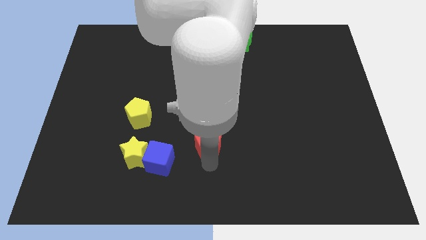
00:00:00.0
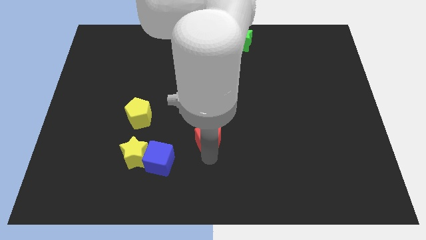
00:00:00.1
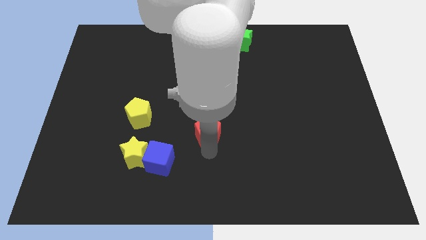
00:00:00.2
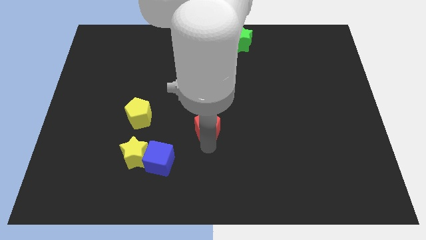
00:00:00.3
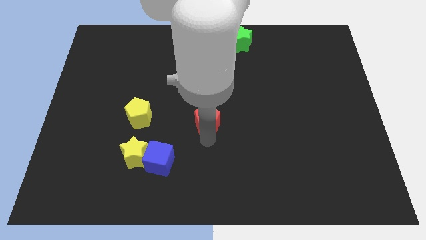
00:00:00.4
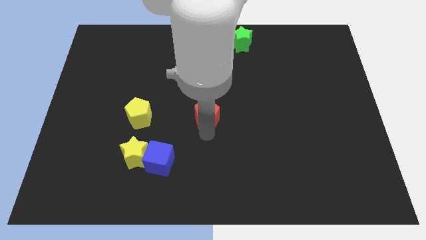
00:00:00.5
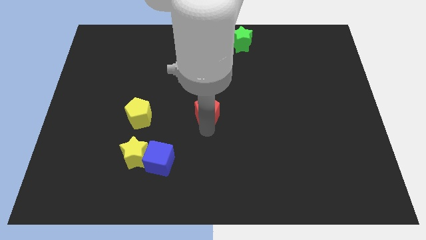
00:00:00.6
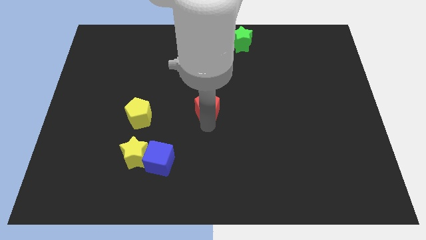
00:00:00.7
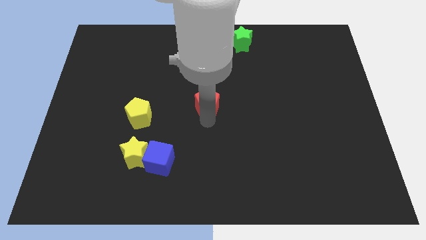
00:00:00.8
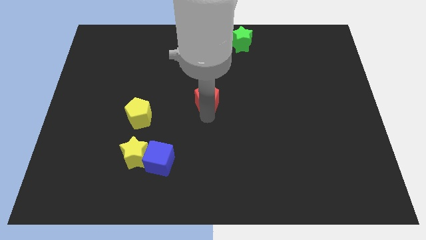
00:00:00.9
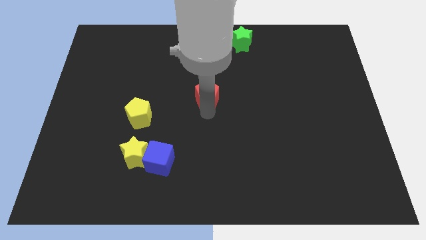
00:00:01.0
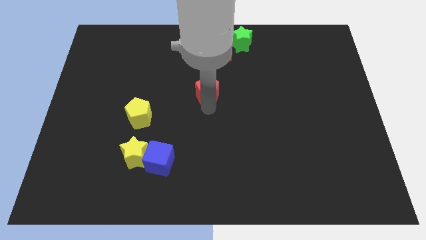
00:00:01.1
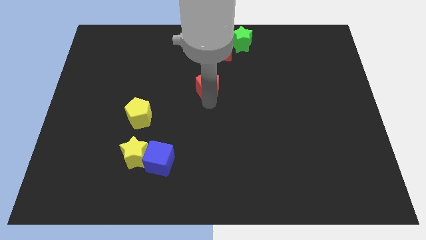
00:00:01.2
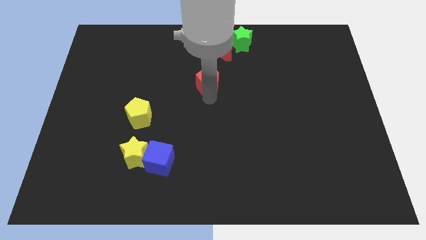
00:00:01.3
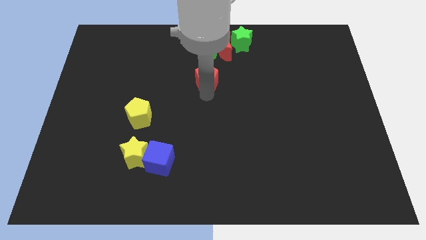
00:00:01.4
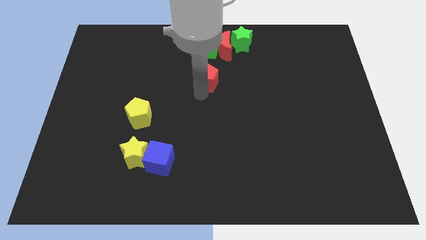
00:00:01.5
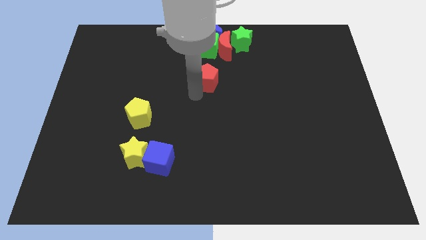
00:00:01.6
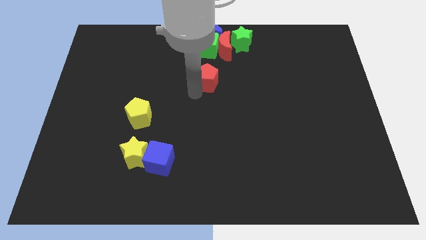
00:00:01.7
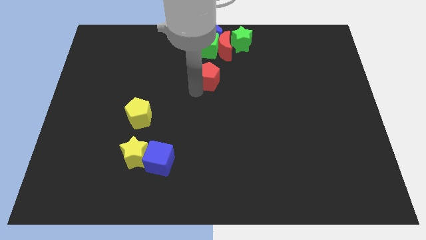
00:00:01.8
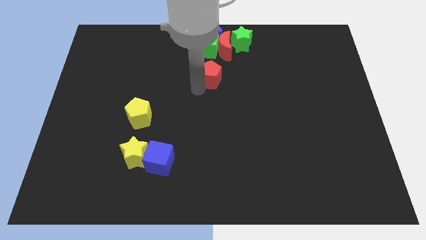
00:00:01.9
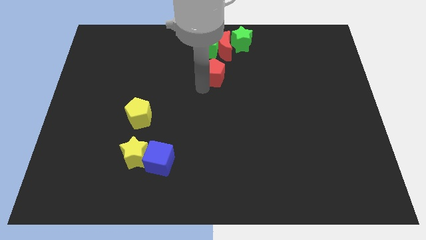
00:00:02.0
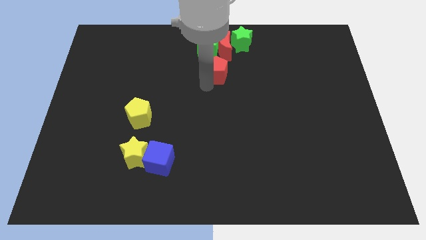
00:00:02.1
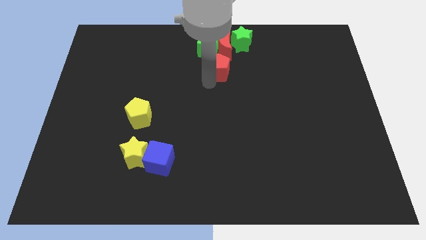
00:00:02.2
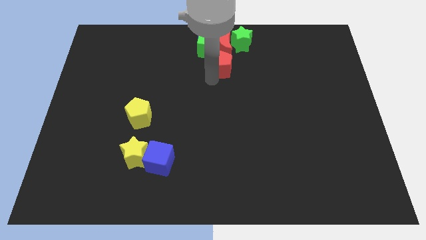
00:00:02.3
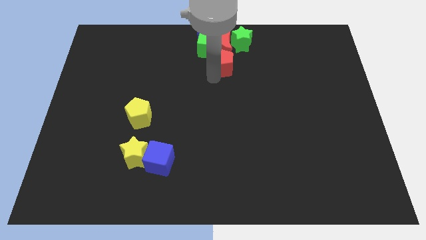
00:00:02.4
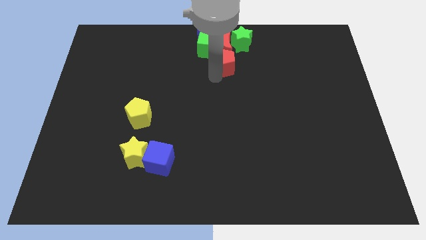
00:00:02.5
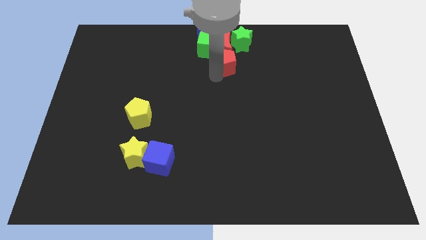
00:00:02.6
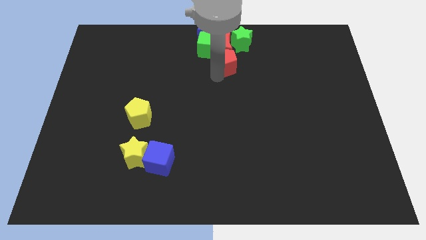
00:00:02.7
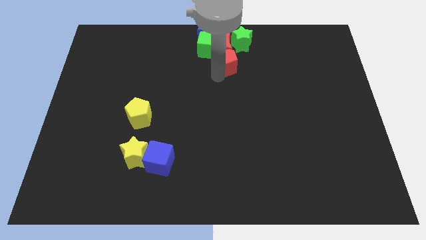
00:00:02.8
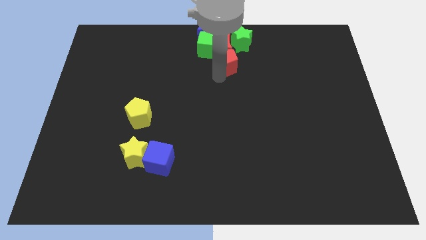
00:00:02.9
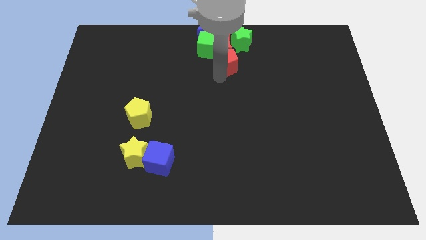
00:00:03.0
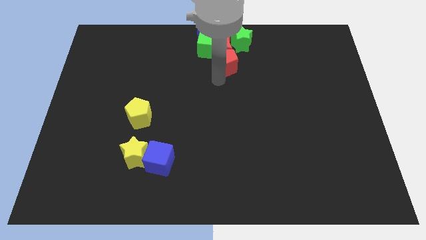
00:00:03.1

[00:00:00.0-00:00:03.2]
drag the red pentagon into the bottom side of the red moon

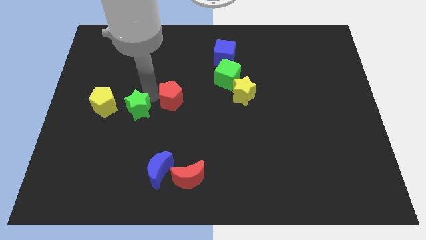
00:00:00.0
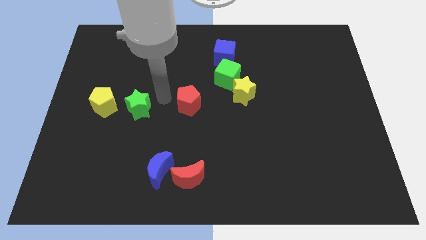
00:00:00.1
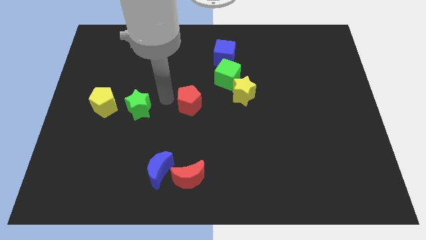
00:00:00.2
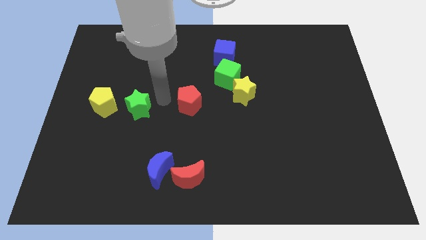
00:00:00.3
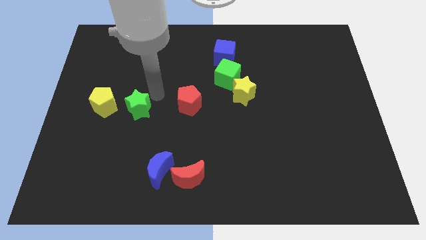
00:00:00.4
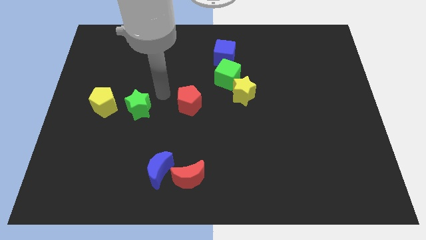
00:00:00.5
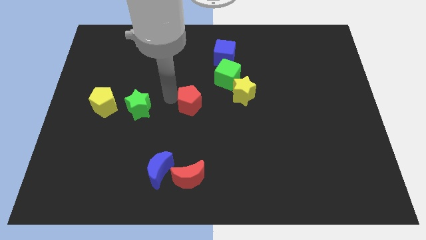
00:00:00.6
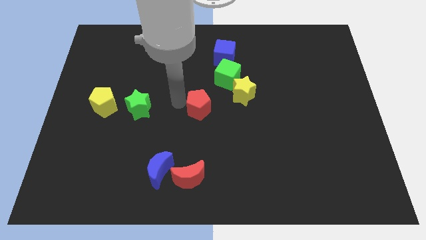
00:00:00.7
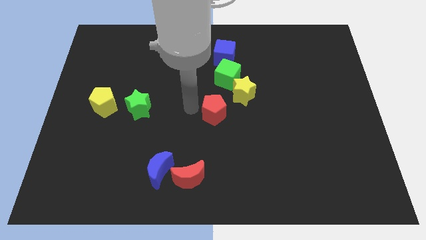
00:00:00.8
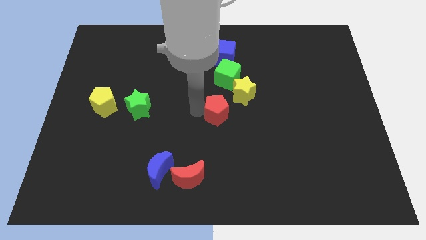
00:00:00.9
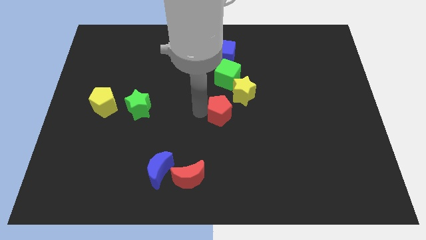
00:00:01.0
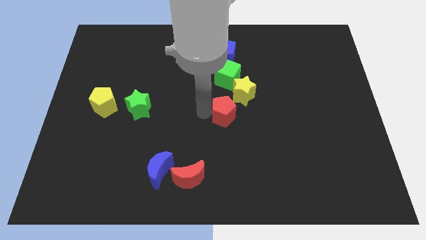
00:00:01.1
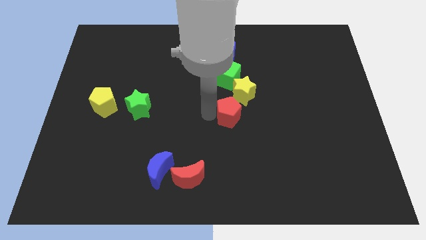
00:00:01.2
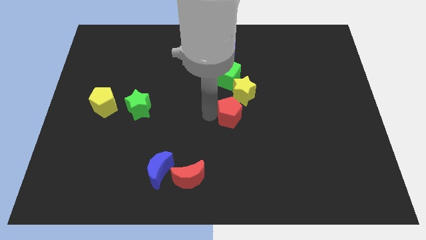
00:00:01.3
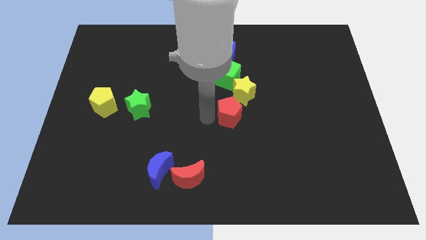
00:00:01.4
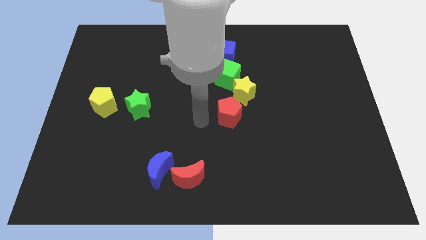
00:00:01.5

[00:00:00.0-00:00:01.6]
slide the red pentagon vertically to the bottom side of the green cube

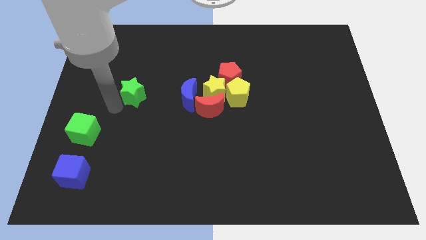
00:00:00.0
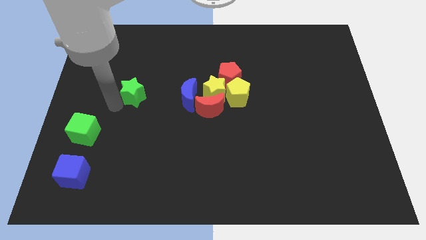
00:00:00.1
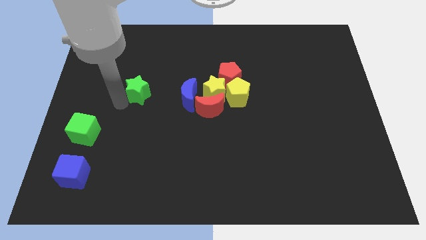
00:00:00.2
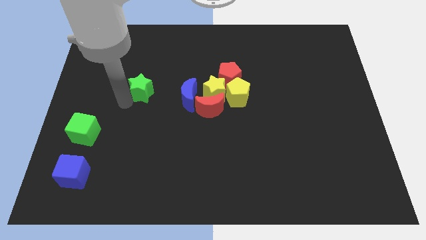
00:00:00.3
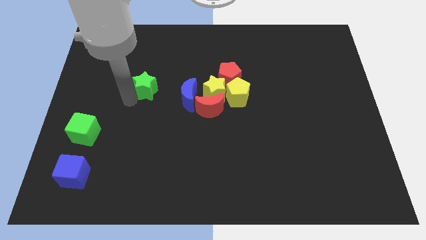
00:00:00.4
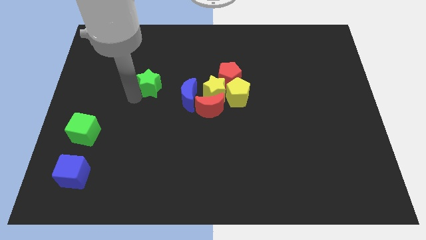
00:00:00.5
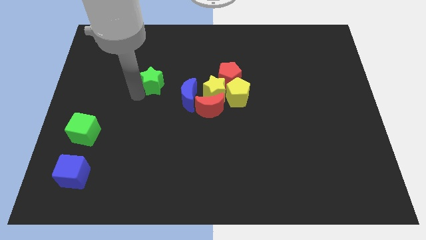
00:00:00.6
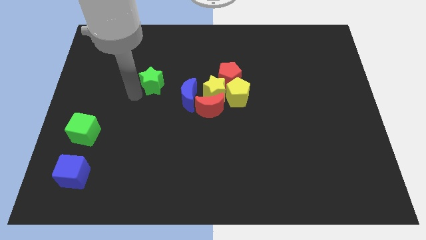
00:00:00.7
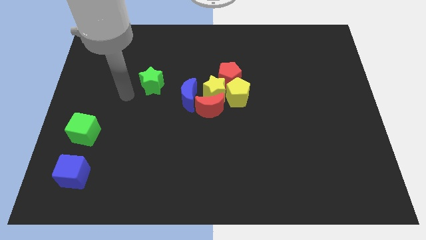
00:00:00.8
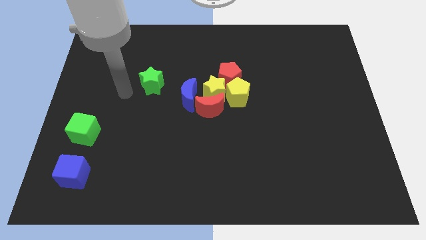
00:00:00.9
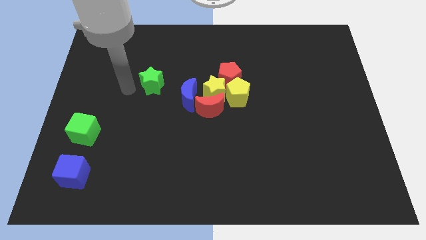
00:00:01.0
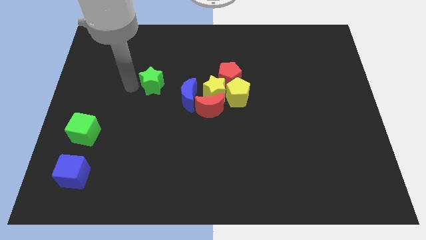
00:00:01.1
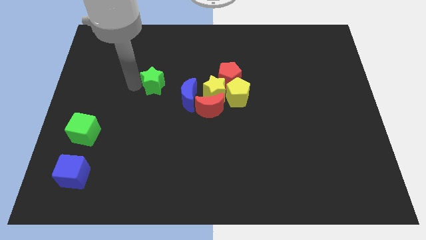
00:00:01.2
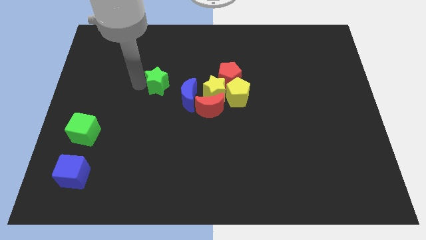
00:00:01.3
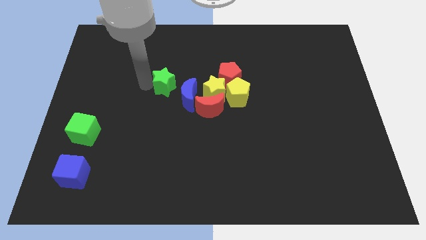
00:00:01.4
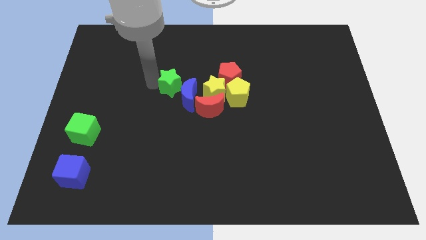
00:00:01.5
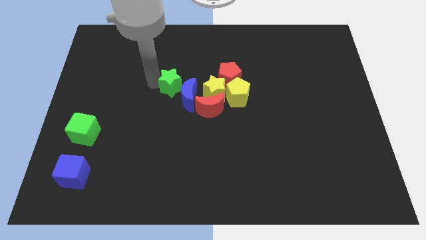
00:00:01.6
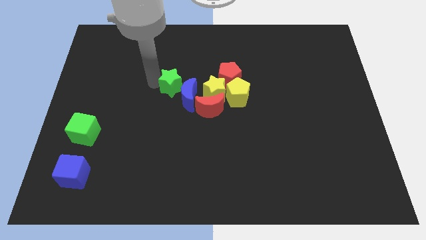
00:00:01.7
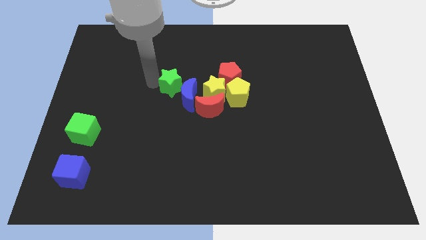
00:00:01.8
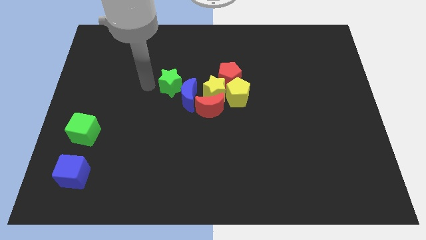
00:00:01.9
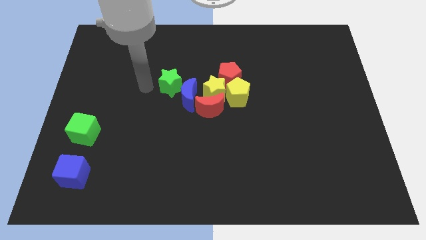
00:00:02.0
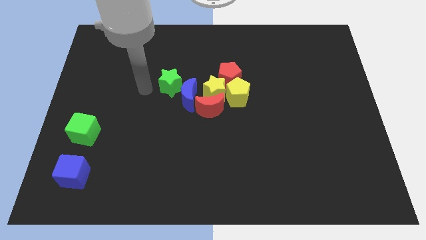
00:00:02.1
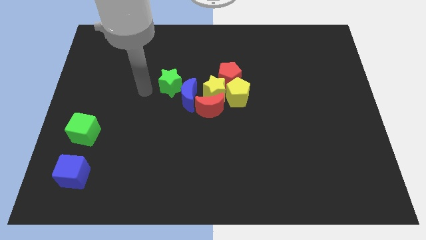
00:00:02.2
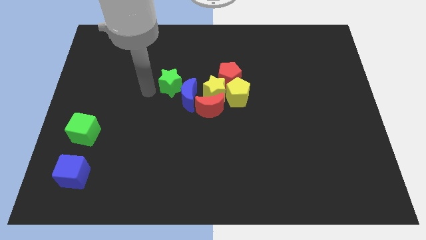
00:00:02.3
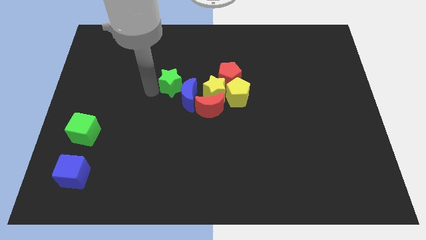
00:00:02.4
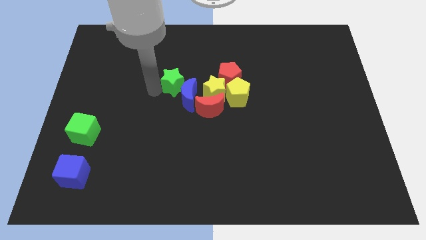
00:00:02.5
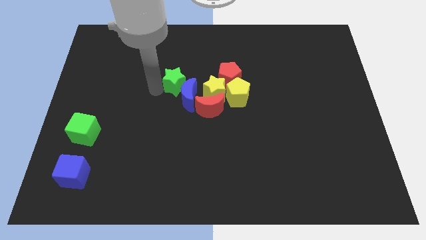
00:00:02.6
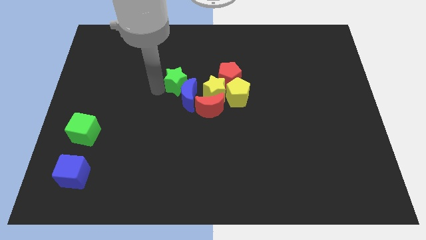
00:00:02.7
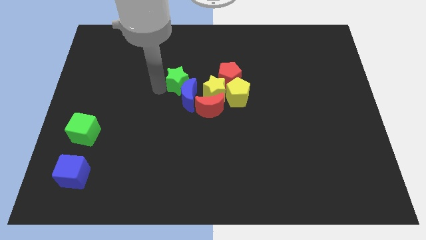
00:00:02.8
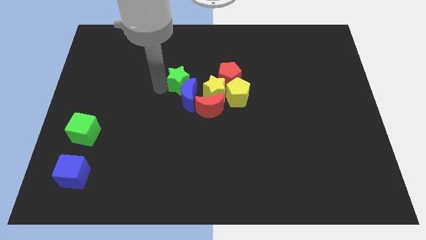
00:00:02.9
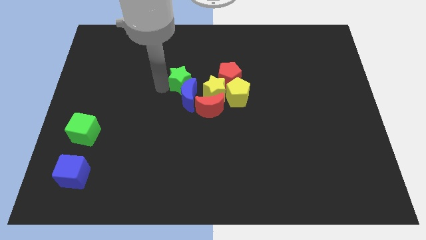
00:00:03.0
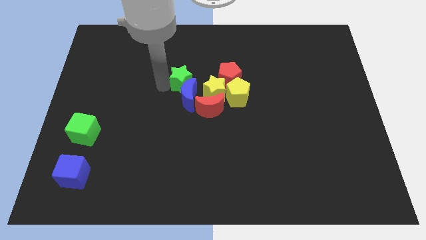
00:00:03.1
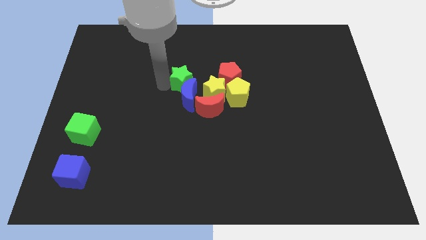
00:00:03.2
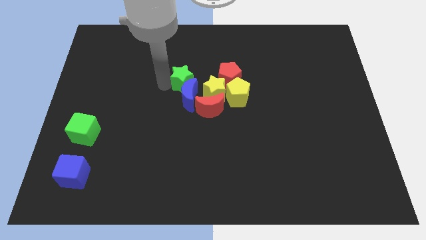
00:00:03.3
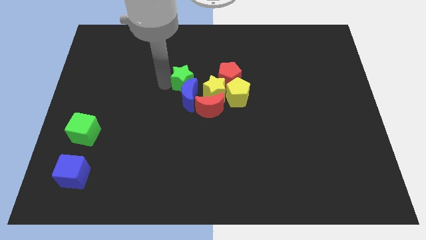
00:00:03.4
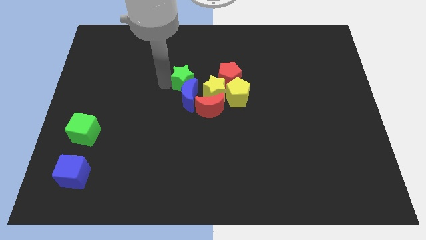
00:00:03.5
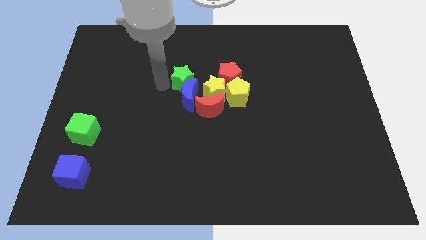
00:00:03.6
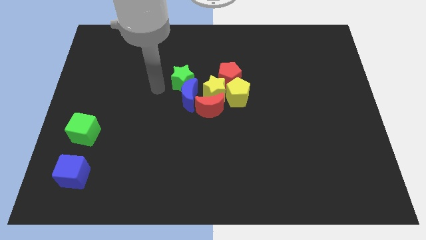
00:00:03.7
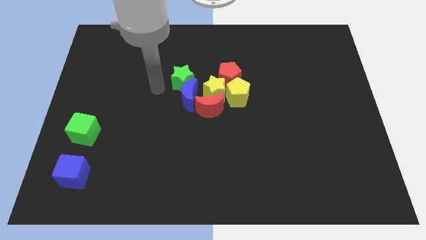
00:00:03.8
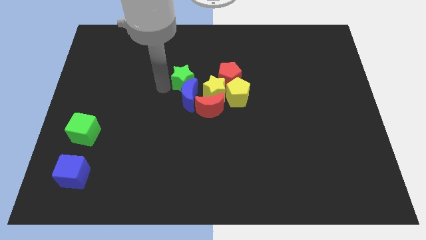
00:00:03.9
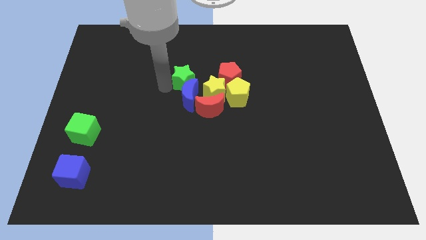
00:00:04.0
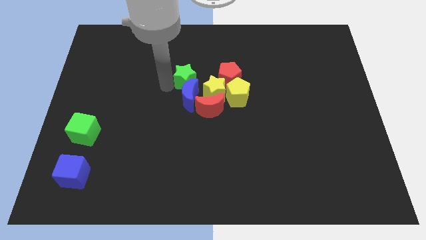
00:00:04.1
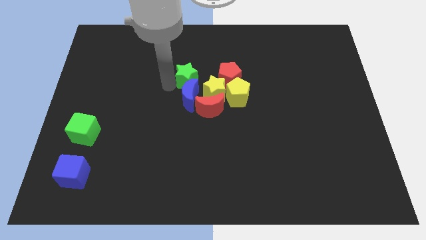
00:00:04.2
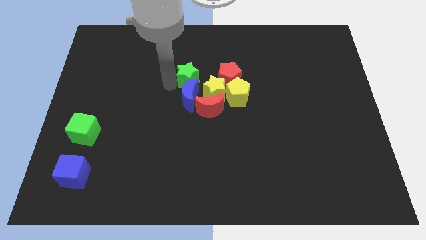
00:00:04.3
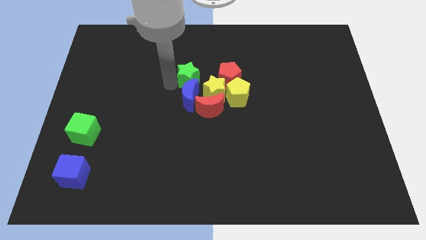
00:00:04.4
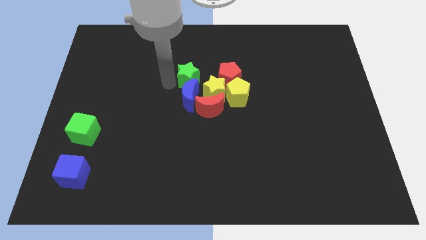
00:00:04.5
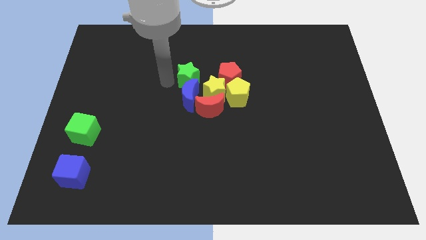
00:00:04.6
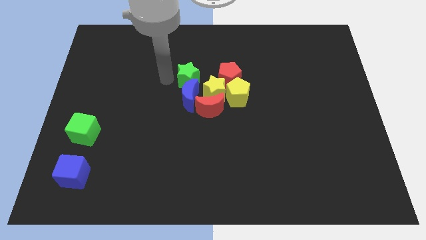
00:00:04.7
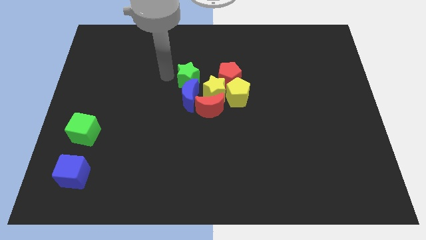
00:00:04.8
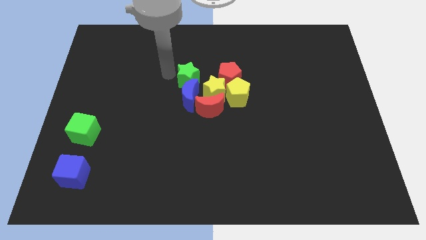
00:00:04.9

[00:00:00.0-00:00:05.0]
push green star into blue crescent
